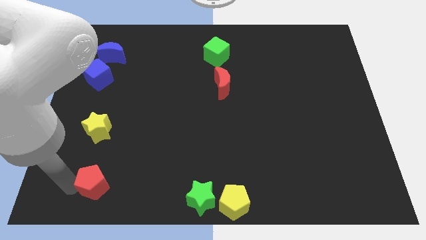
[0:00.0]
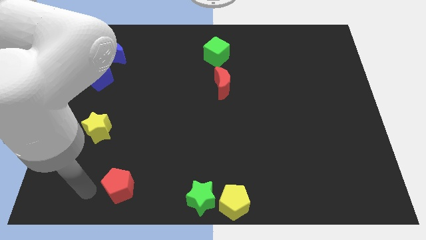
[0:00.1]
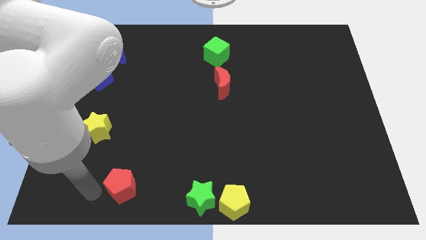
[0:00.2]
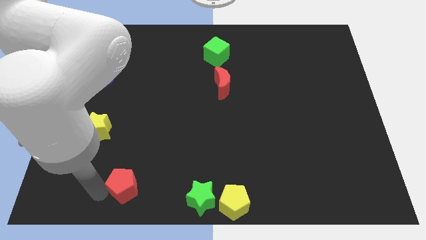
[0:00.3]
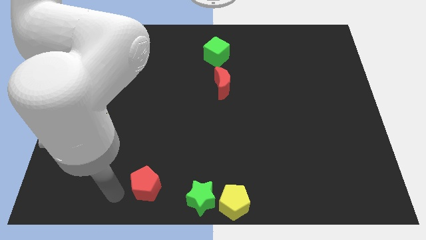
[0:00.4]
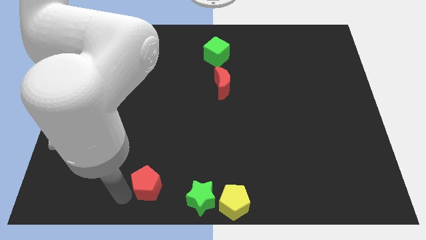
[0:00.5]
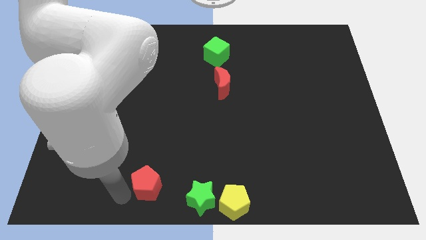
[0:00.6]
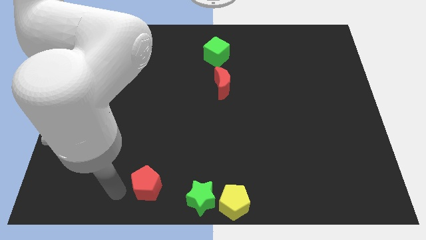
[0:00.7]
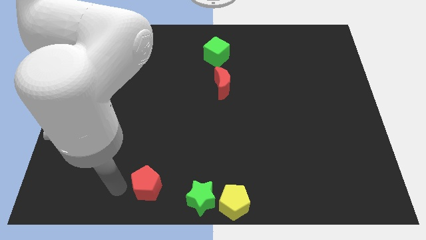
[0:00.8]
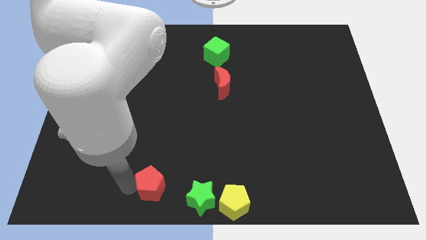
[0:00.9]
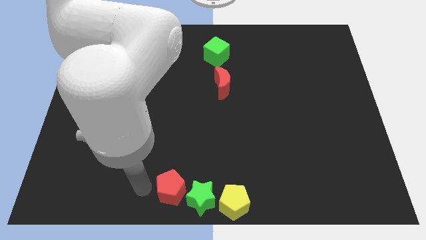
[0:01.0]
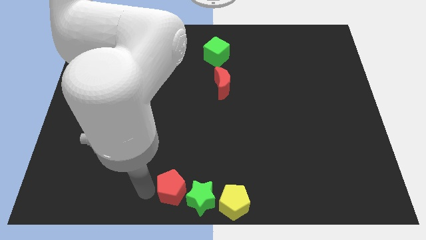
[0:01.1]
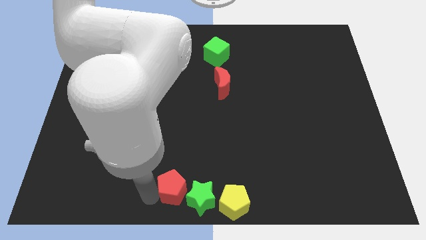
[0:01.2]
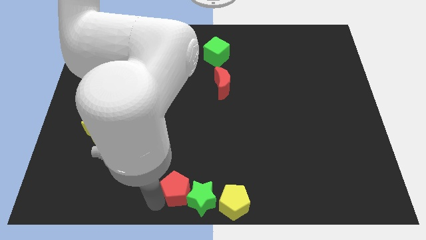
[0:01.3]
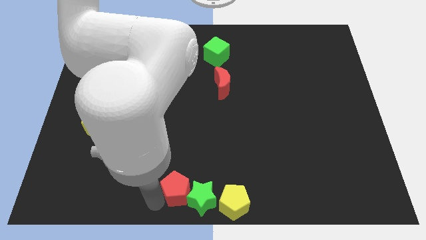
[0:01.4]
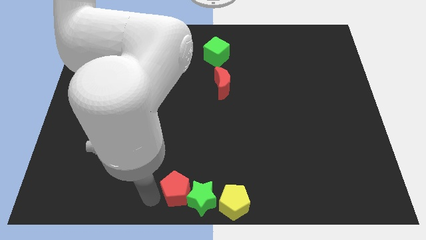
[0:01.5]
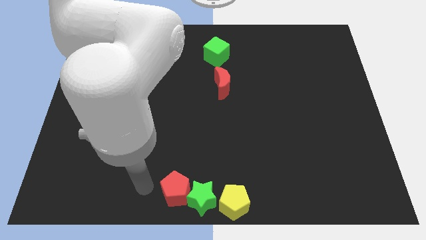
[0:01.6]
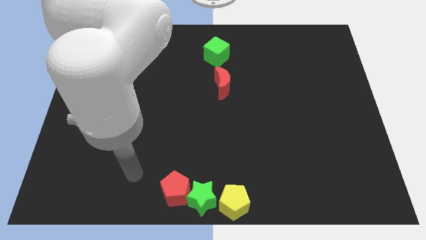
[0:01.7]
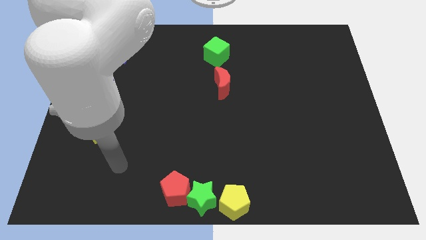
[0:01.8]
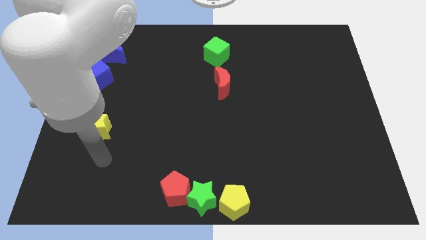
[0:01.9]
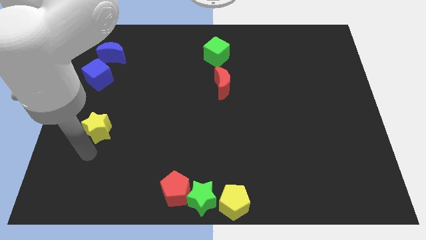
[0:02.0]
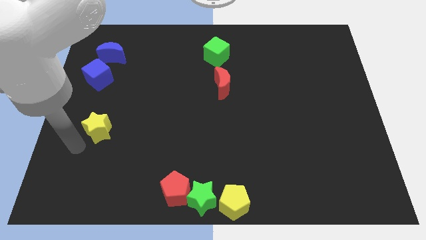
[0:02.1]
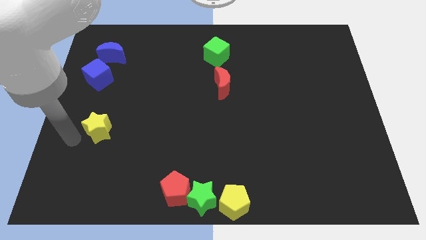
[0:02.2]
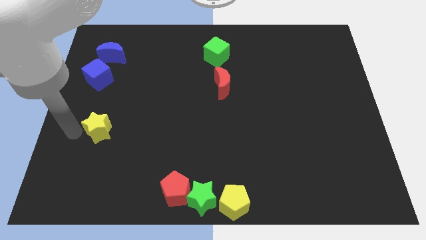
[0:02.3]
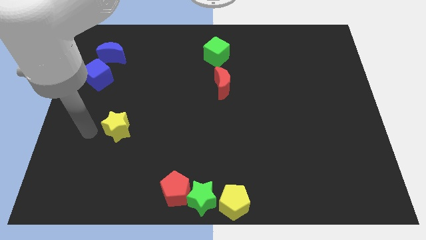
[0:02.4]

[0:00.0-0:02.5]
push the red pentagon close to the green star

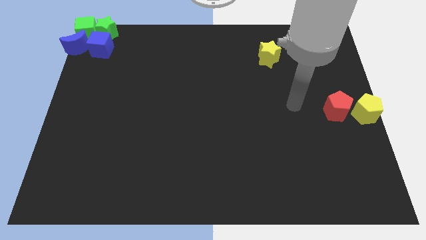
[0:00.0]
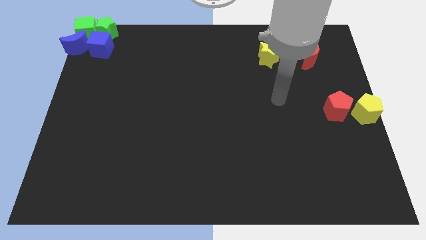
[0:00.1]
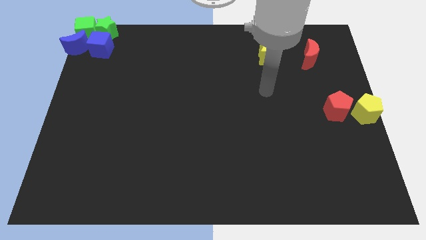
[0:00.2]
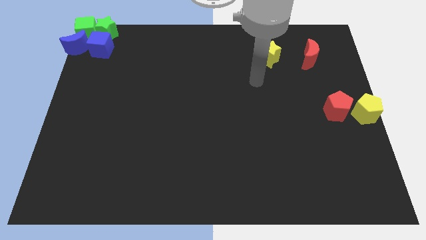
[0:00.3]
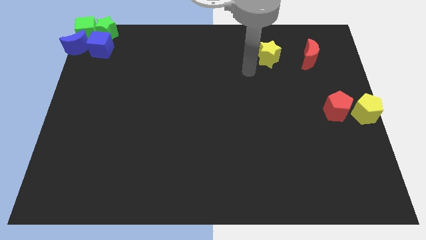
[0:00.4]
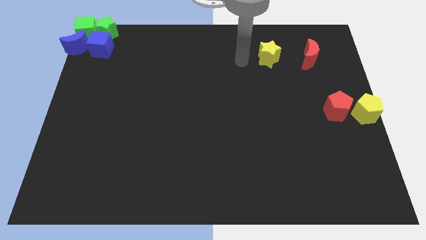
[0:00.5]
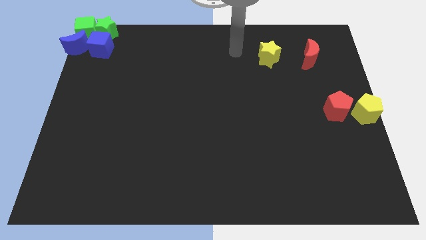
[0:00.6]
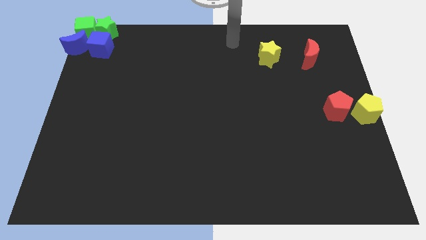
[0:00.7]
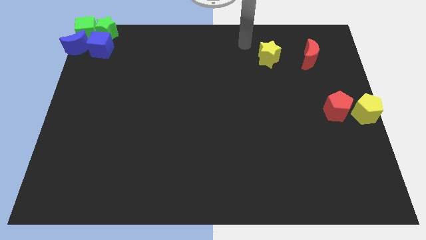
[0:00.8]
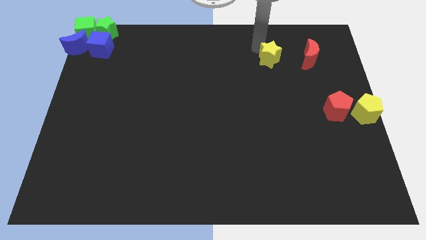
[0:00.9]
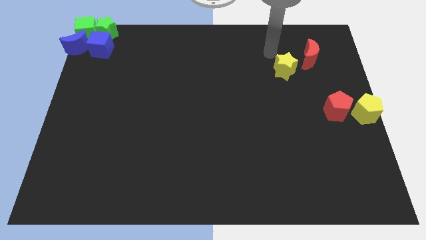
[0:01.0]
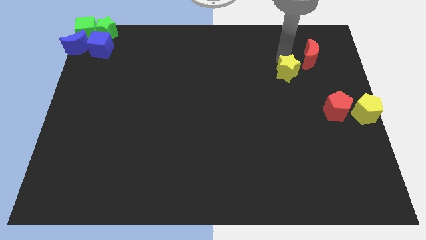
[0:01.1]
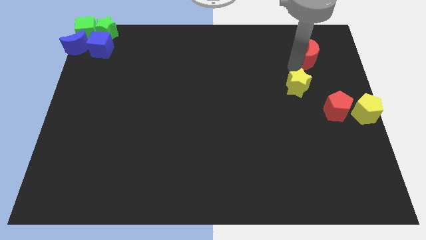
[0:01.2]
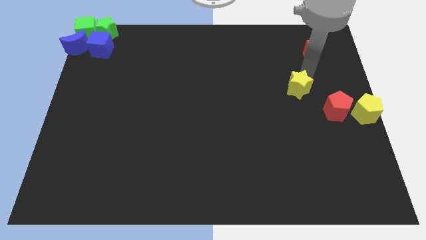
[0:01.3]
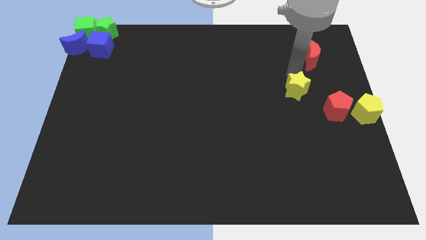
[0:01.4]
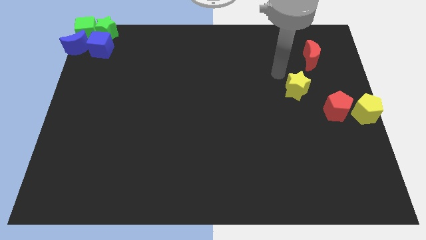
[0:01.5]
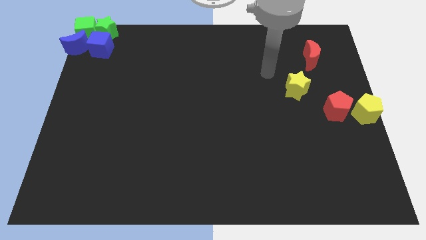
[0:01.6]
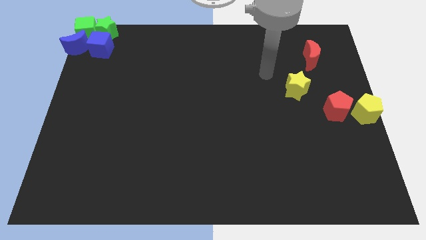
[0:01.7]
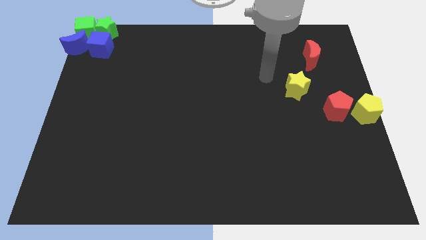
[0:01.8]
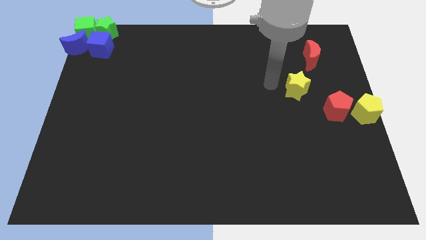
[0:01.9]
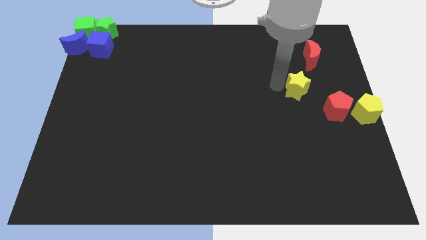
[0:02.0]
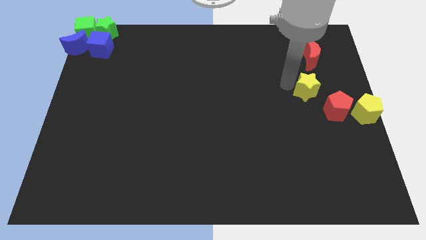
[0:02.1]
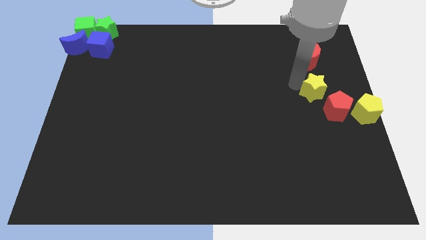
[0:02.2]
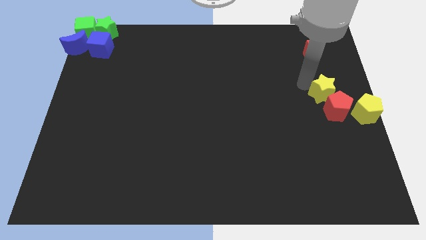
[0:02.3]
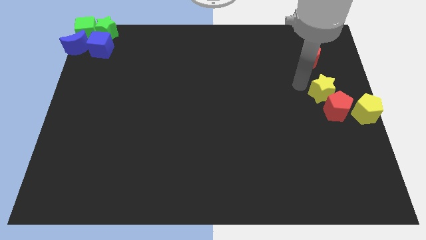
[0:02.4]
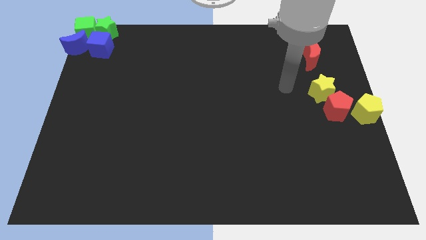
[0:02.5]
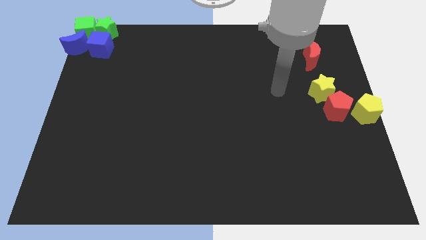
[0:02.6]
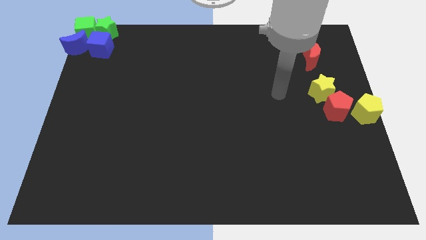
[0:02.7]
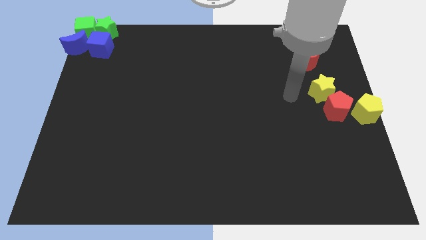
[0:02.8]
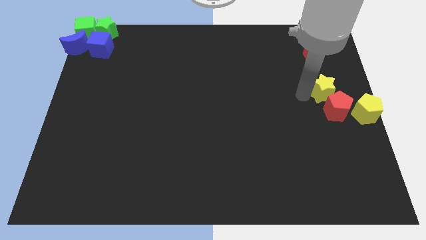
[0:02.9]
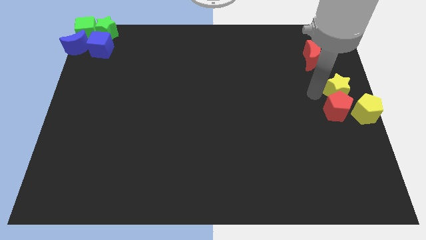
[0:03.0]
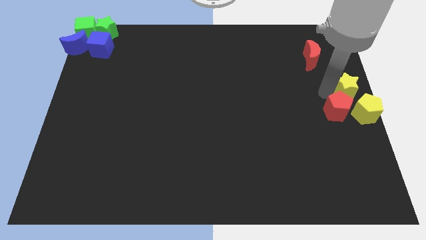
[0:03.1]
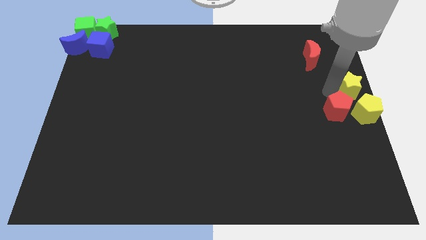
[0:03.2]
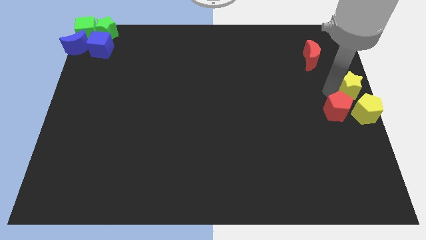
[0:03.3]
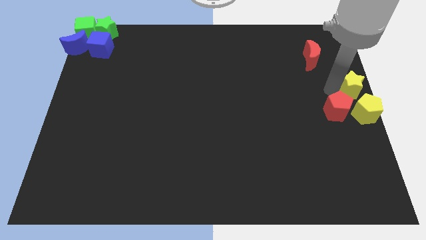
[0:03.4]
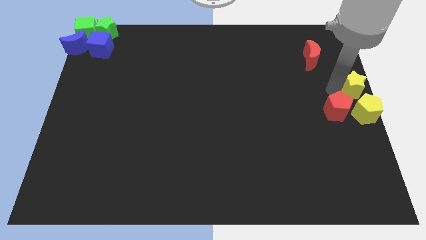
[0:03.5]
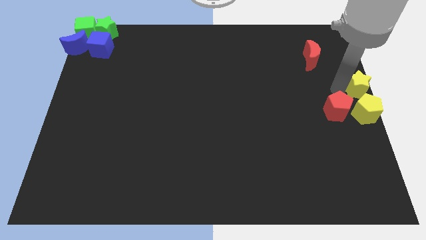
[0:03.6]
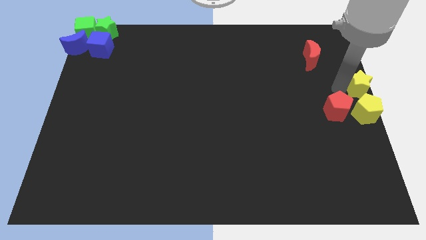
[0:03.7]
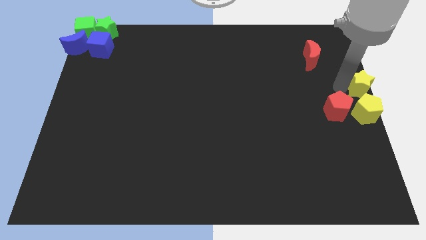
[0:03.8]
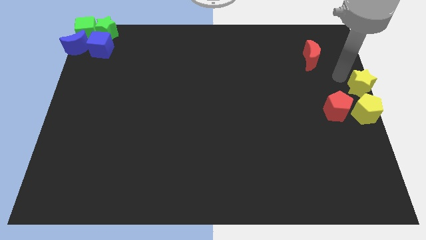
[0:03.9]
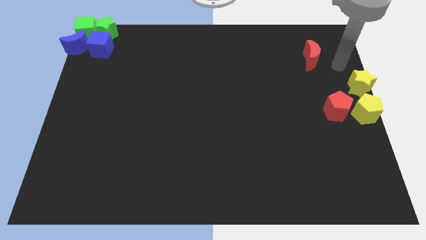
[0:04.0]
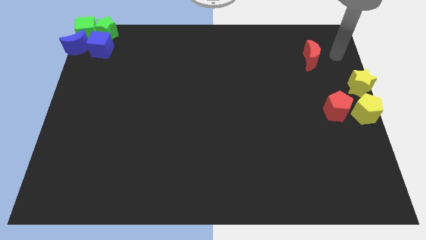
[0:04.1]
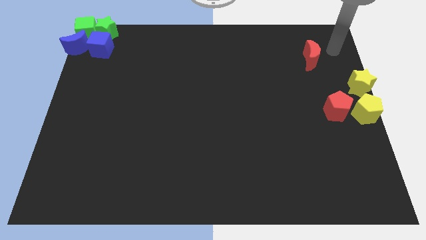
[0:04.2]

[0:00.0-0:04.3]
place the yellow star at the top side of the yellow pentagon

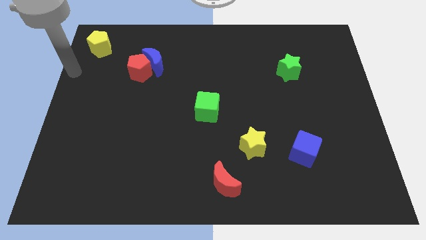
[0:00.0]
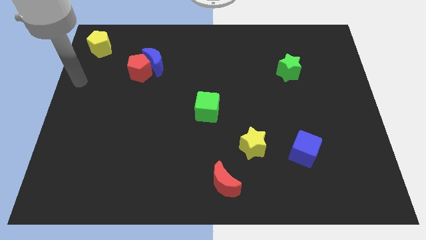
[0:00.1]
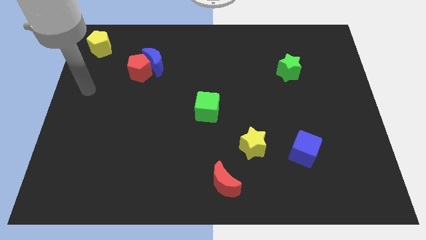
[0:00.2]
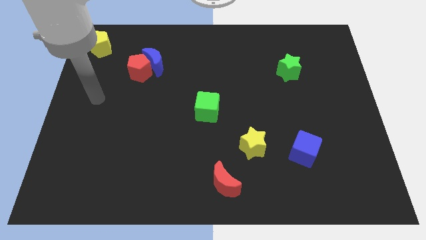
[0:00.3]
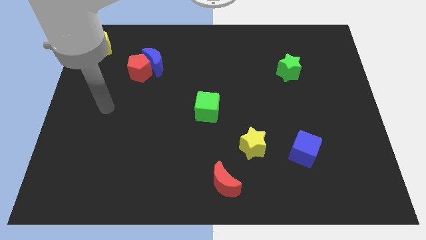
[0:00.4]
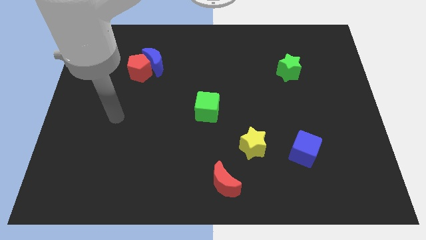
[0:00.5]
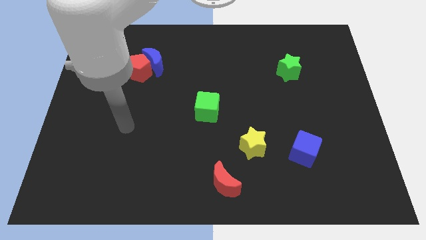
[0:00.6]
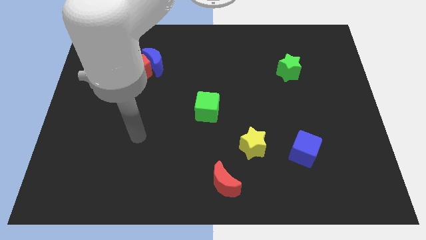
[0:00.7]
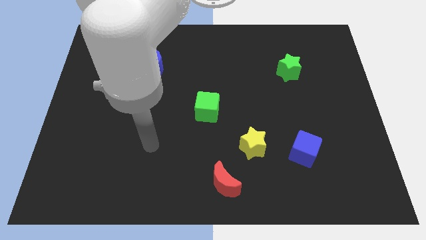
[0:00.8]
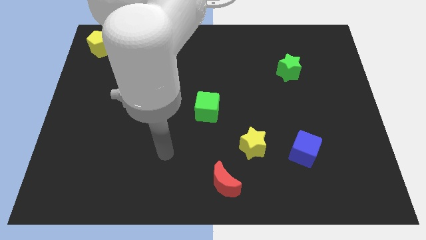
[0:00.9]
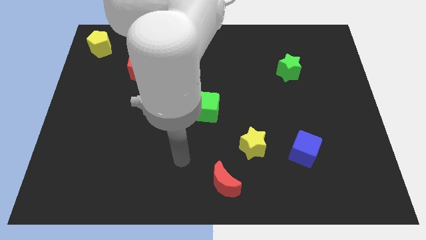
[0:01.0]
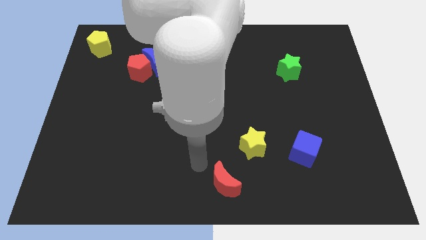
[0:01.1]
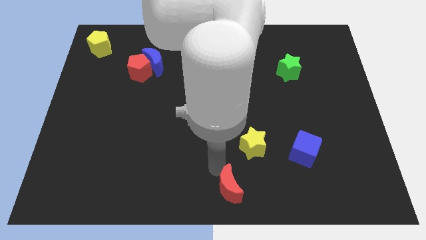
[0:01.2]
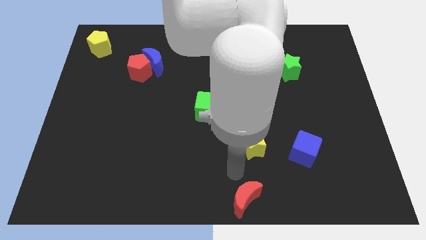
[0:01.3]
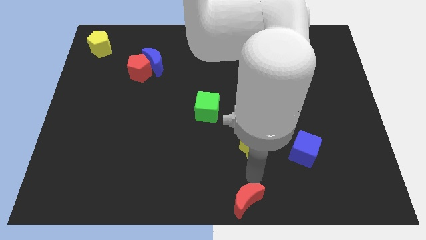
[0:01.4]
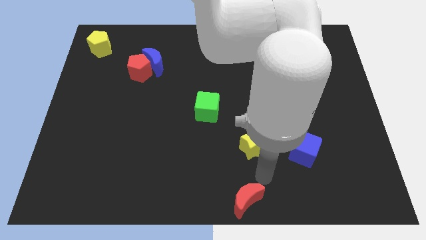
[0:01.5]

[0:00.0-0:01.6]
move red moon to the bottom side

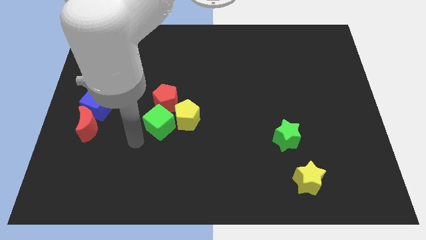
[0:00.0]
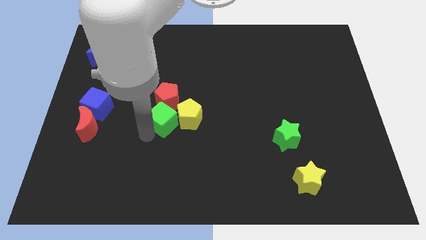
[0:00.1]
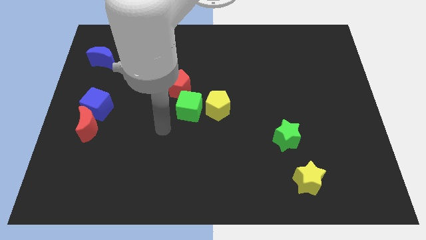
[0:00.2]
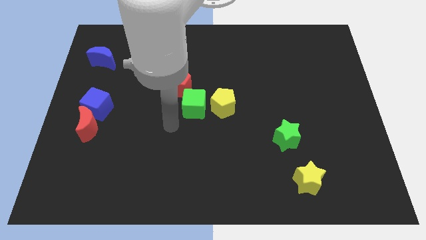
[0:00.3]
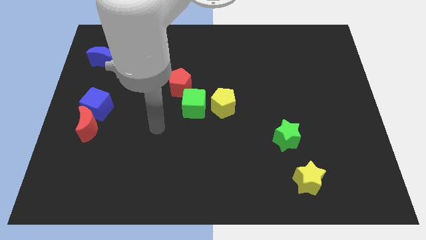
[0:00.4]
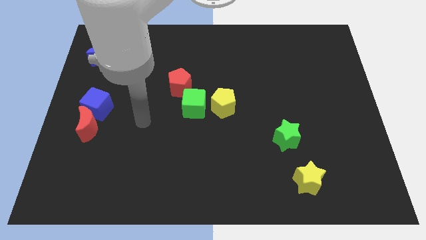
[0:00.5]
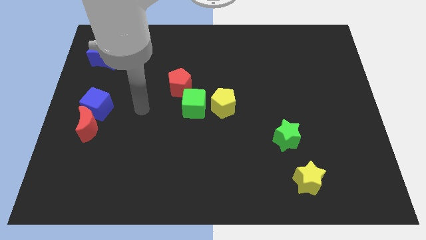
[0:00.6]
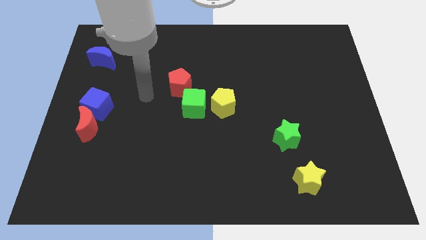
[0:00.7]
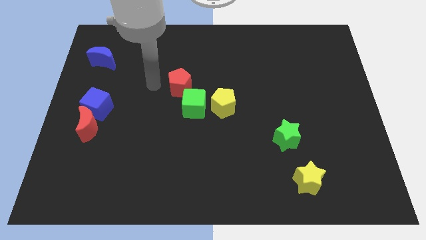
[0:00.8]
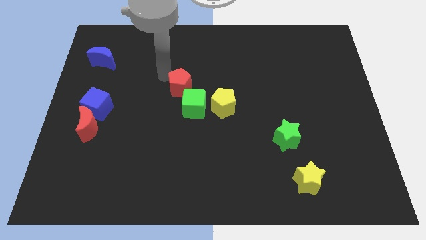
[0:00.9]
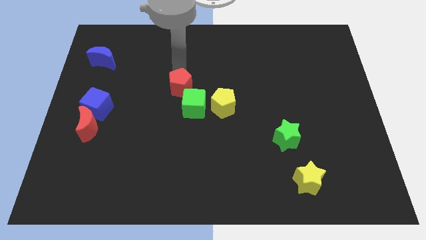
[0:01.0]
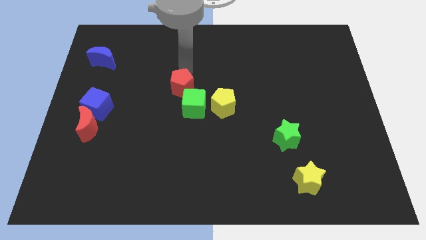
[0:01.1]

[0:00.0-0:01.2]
push the green cube to the center of the board
